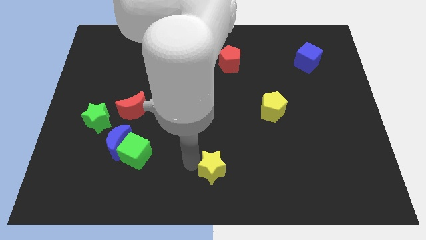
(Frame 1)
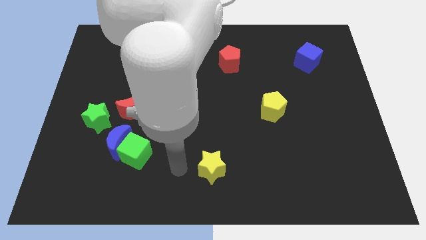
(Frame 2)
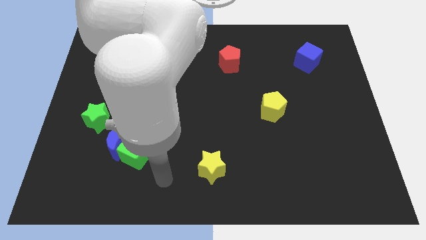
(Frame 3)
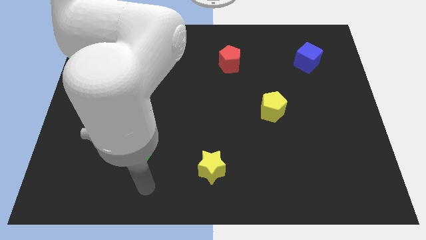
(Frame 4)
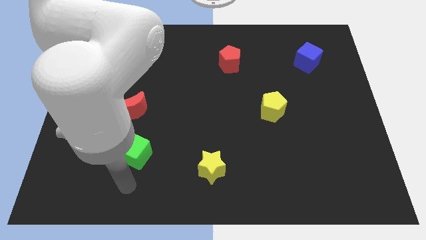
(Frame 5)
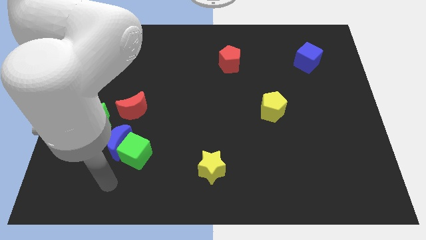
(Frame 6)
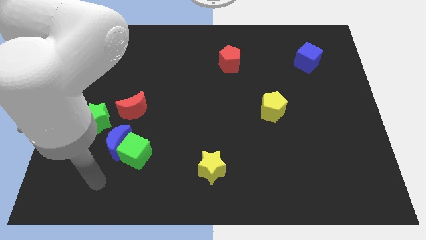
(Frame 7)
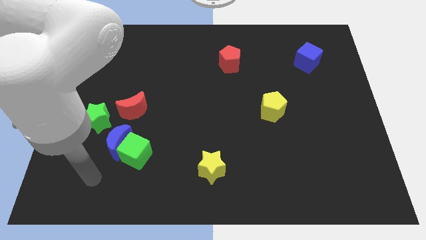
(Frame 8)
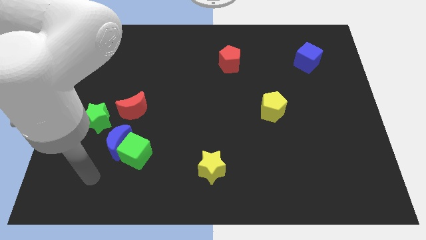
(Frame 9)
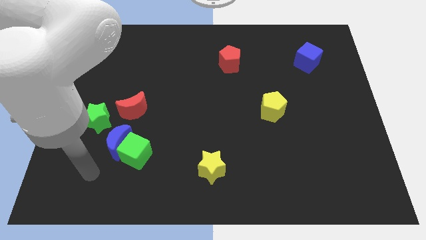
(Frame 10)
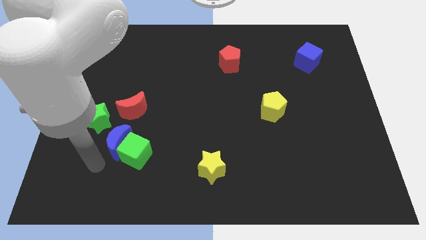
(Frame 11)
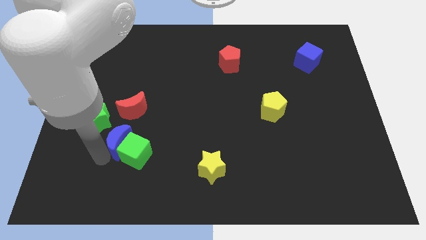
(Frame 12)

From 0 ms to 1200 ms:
point your arm at the left of the green cube

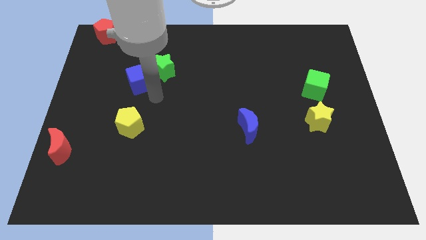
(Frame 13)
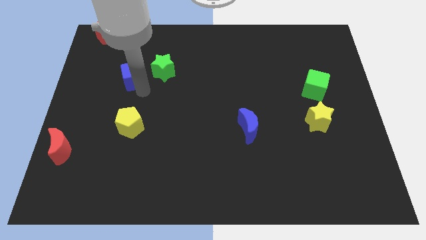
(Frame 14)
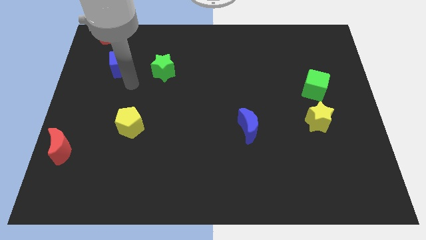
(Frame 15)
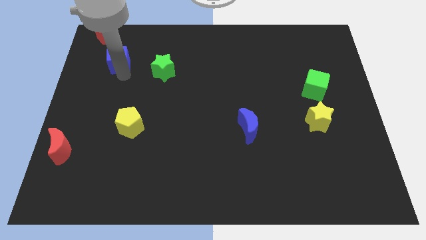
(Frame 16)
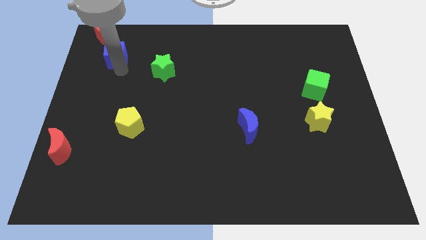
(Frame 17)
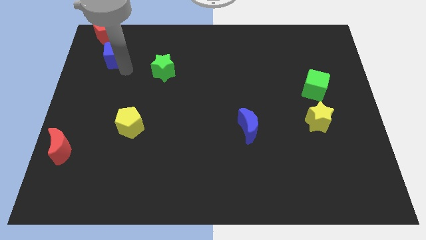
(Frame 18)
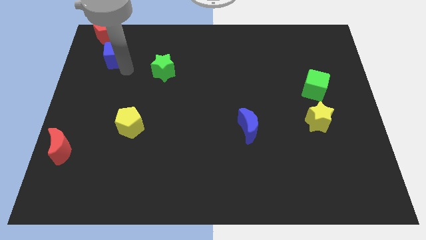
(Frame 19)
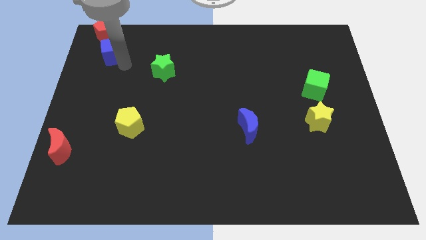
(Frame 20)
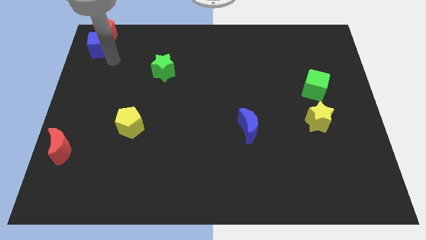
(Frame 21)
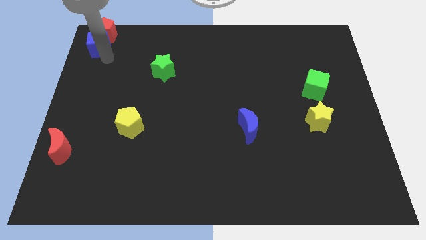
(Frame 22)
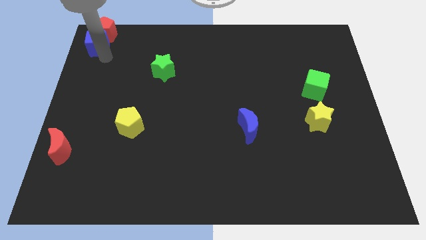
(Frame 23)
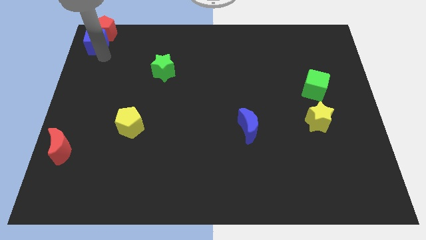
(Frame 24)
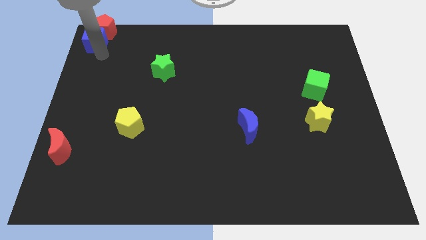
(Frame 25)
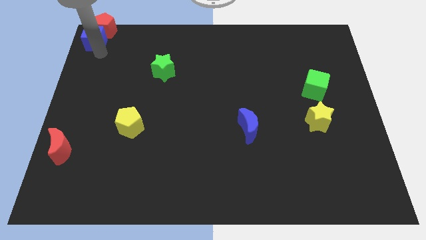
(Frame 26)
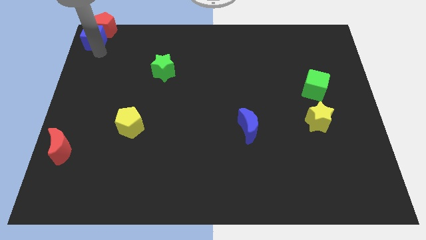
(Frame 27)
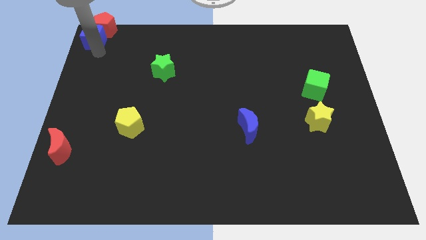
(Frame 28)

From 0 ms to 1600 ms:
move the blue cube close to the red pentagon

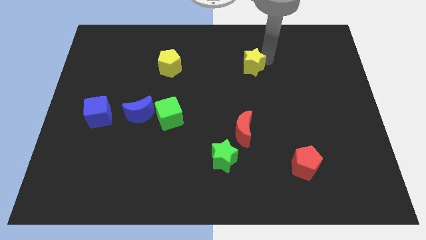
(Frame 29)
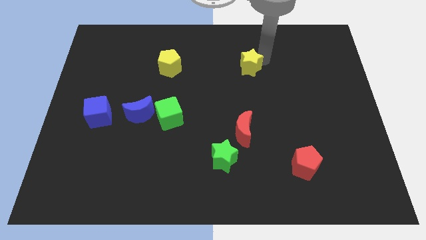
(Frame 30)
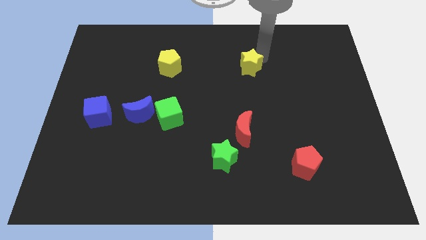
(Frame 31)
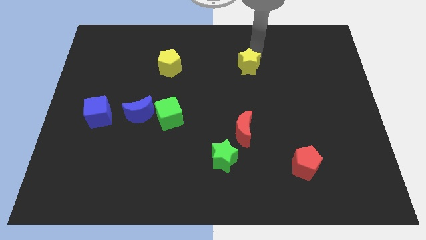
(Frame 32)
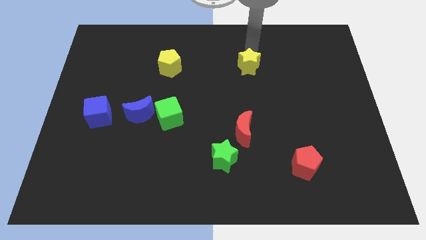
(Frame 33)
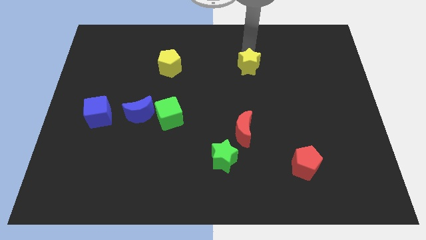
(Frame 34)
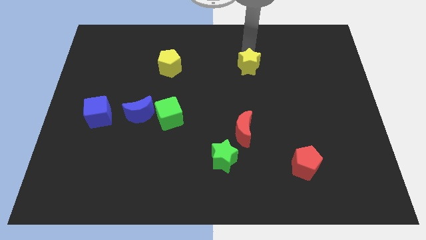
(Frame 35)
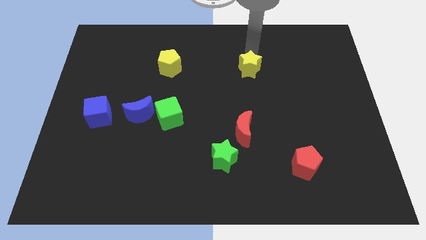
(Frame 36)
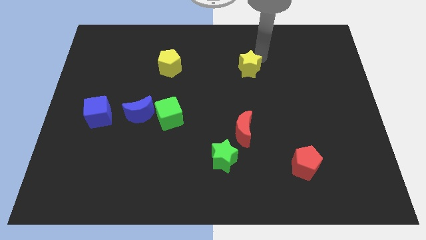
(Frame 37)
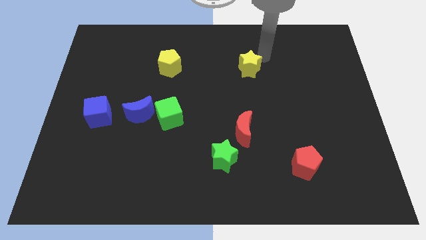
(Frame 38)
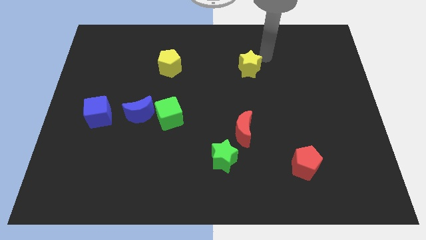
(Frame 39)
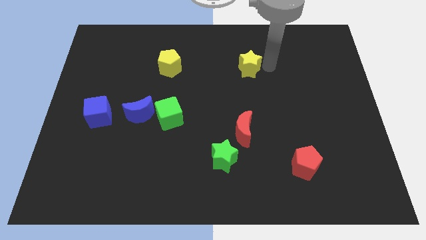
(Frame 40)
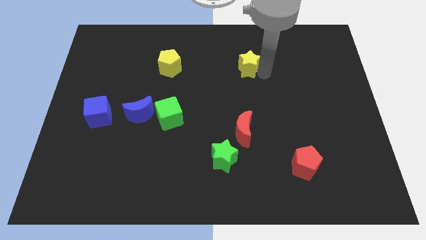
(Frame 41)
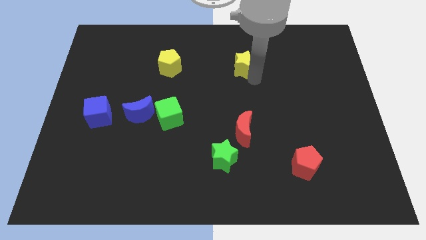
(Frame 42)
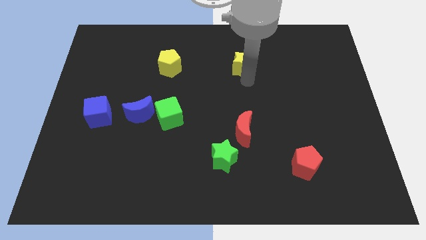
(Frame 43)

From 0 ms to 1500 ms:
place your arm below yellow star

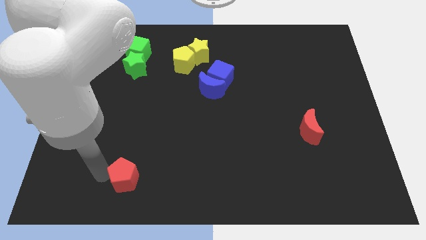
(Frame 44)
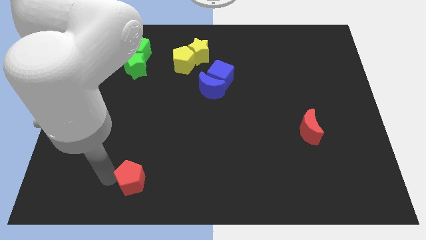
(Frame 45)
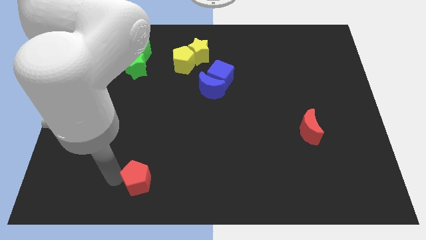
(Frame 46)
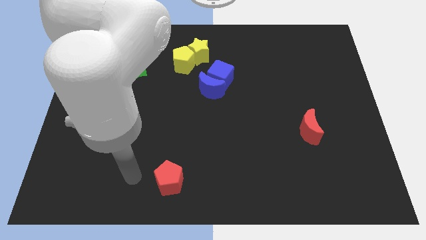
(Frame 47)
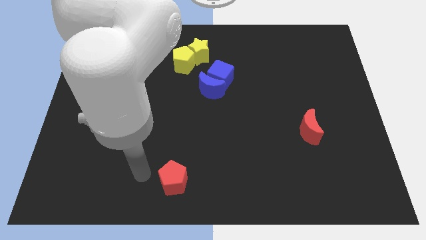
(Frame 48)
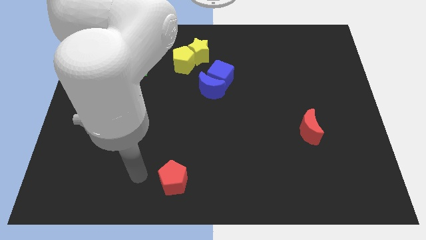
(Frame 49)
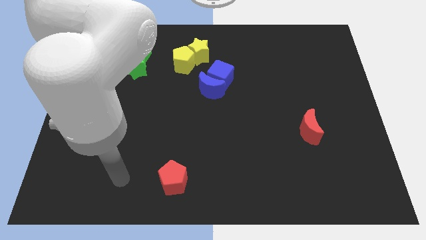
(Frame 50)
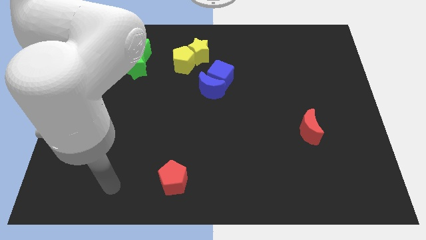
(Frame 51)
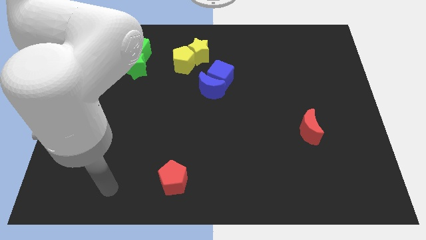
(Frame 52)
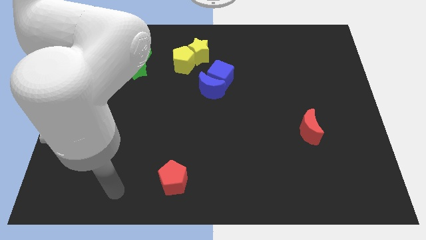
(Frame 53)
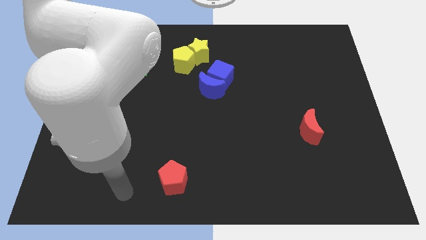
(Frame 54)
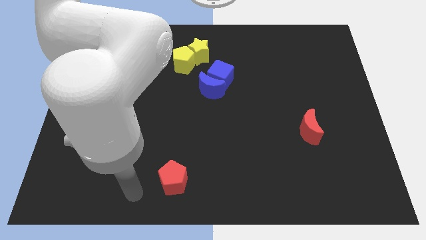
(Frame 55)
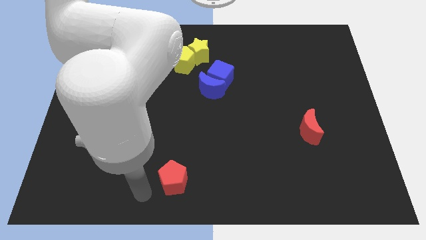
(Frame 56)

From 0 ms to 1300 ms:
push the red pentagon slightly to the right

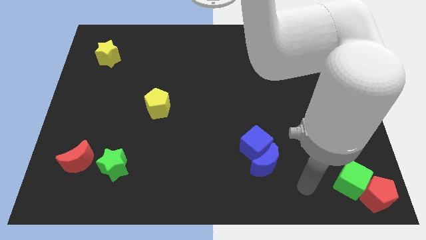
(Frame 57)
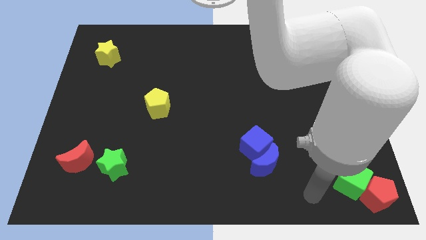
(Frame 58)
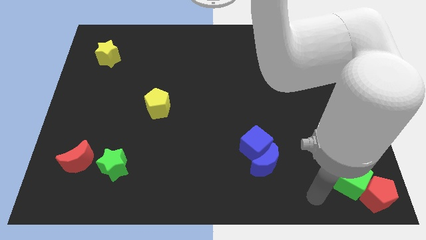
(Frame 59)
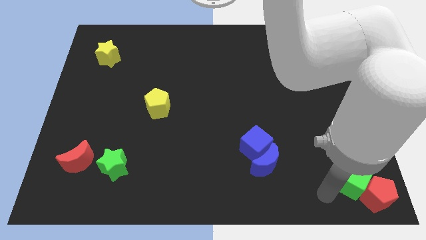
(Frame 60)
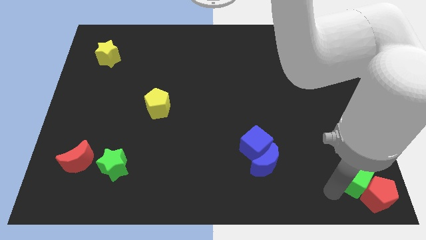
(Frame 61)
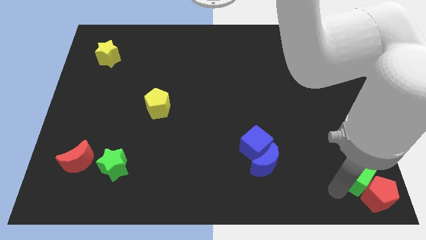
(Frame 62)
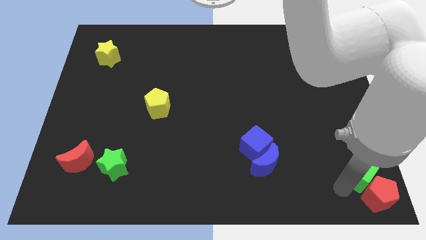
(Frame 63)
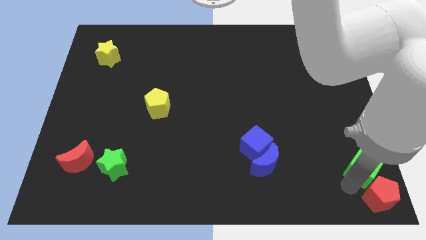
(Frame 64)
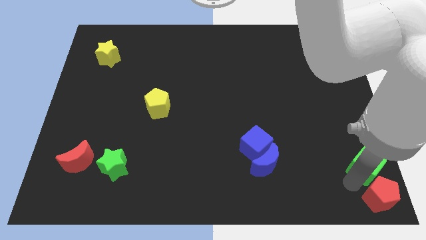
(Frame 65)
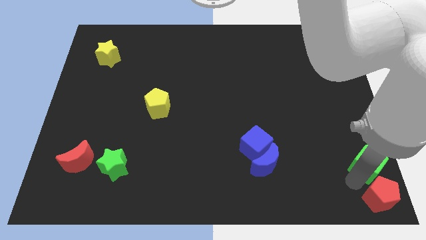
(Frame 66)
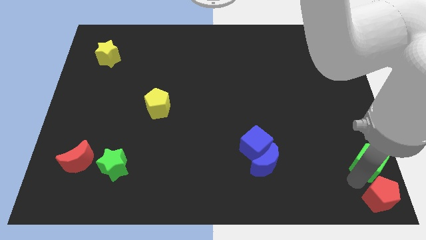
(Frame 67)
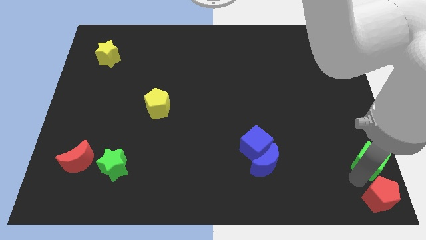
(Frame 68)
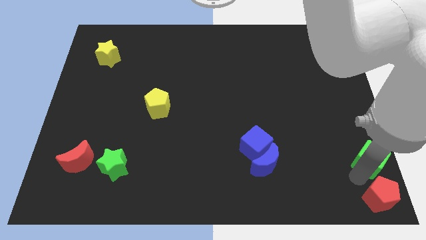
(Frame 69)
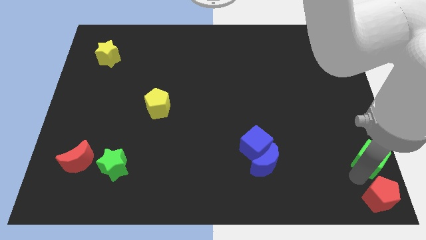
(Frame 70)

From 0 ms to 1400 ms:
push the green cube to the top of the red pentagon

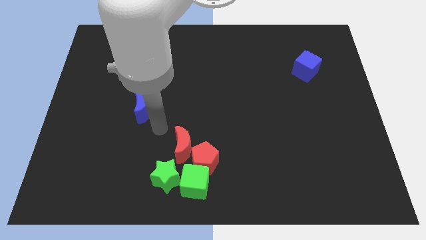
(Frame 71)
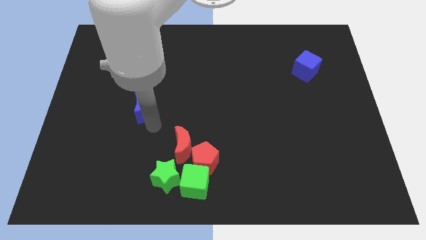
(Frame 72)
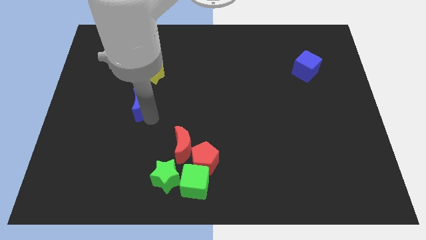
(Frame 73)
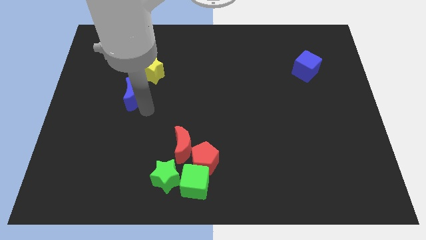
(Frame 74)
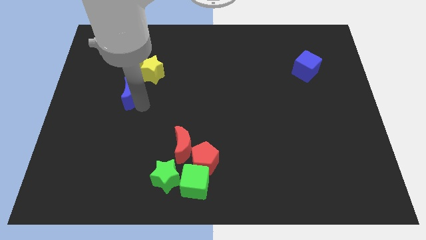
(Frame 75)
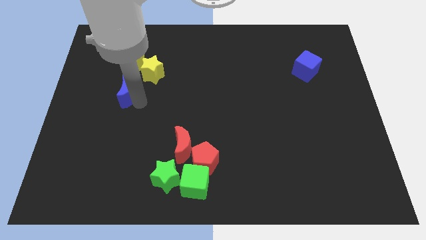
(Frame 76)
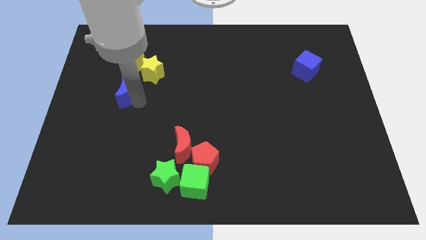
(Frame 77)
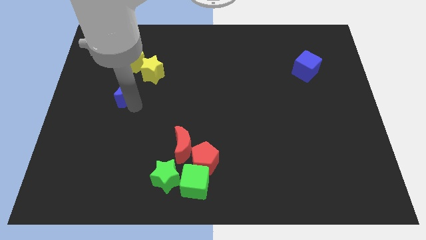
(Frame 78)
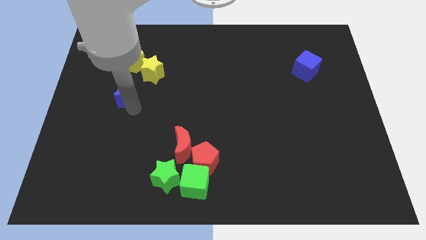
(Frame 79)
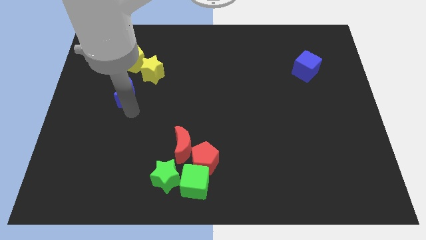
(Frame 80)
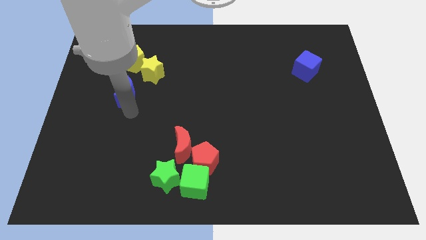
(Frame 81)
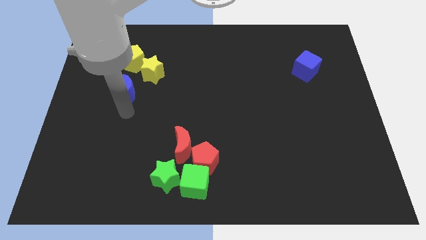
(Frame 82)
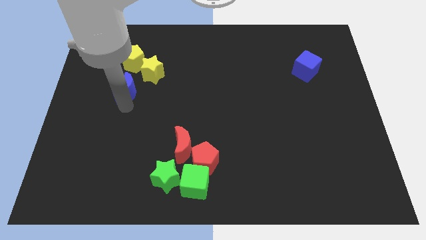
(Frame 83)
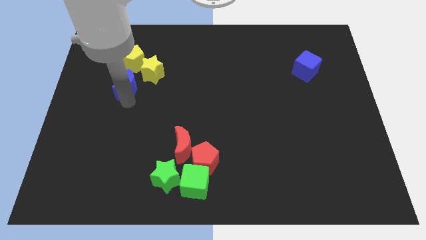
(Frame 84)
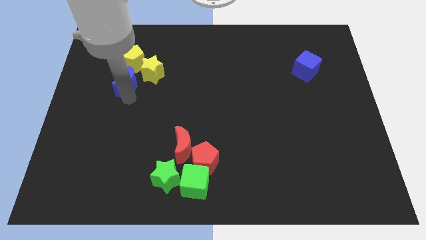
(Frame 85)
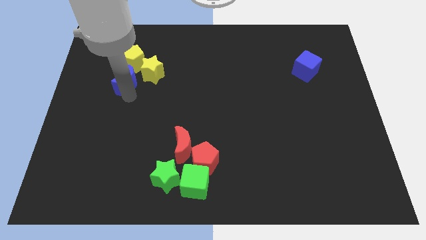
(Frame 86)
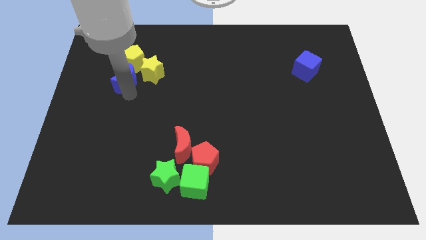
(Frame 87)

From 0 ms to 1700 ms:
put the blue moon below the yellow pentagon
